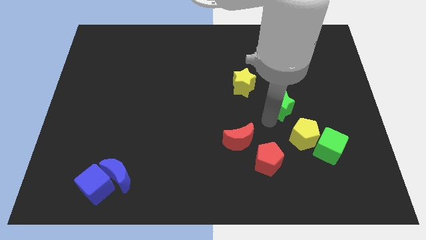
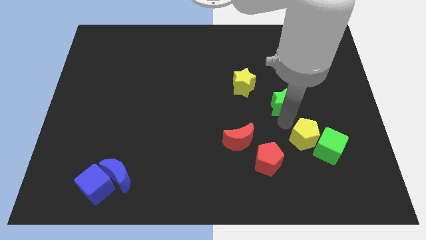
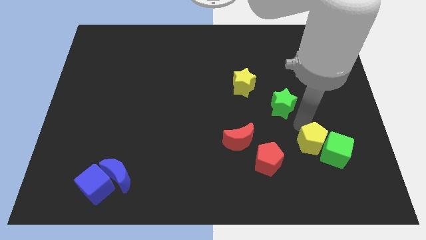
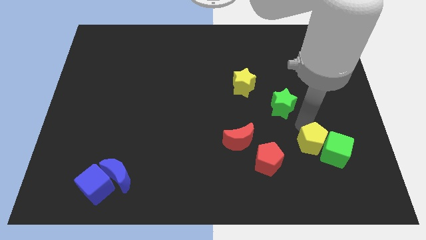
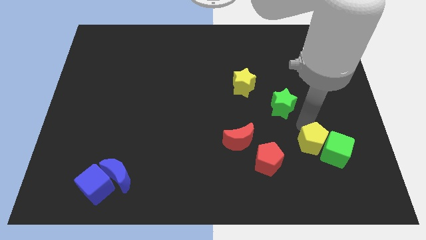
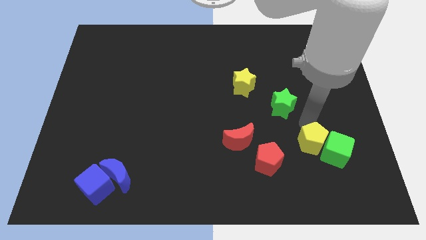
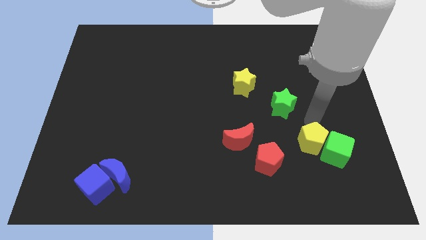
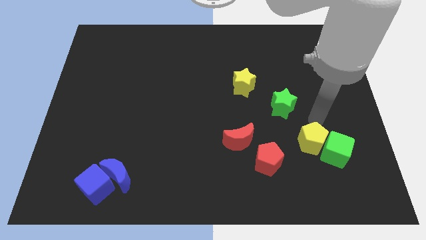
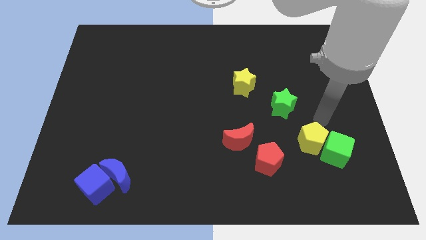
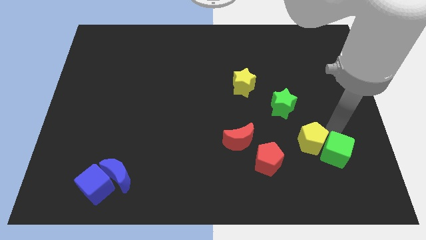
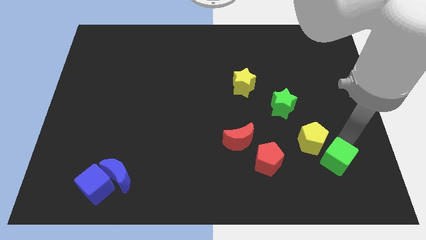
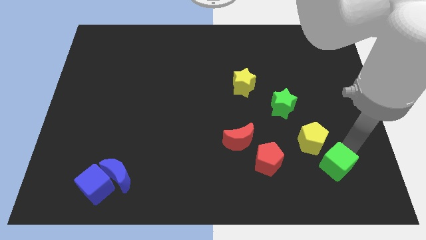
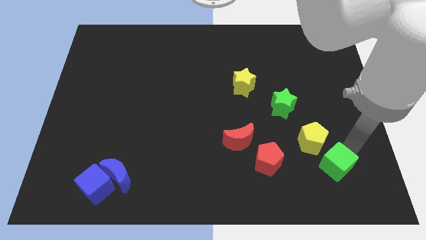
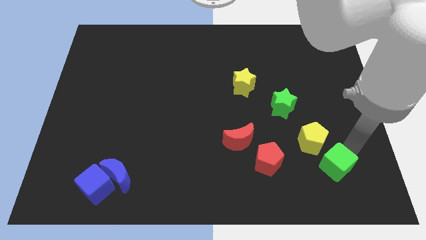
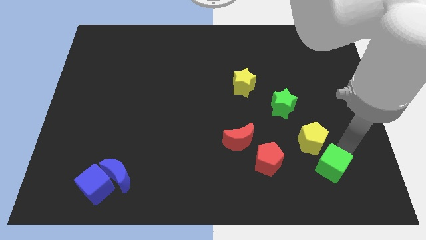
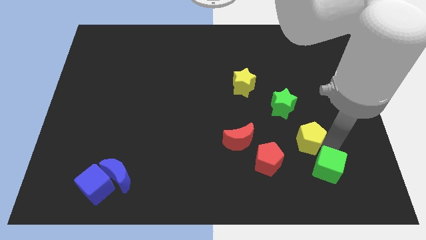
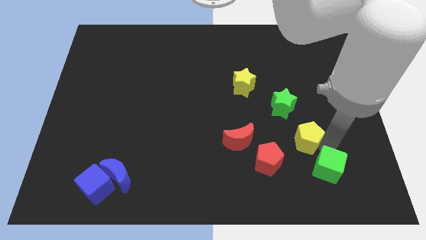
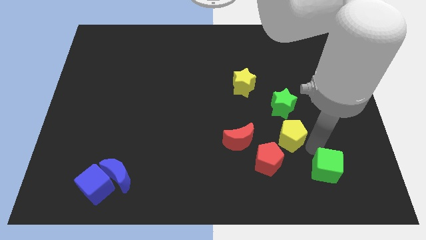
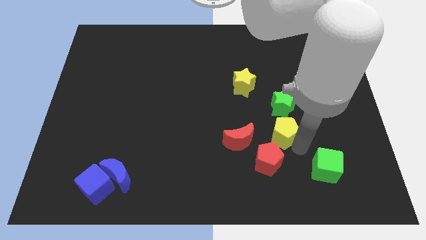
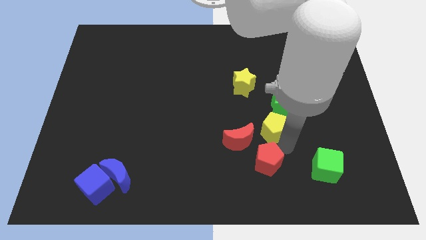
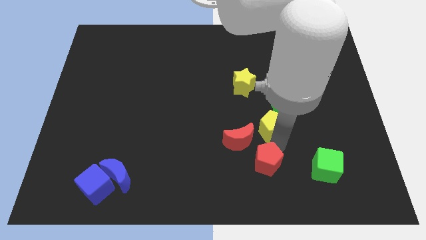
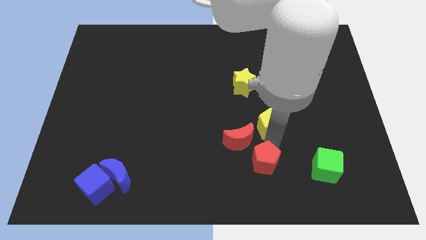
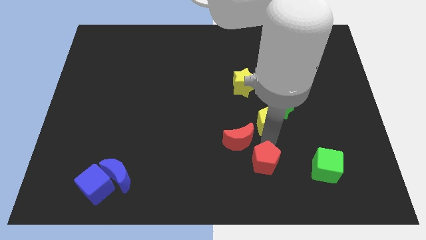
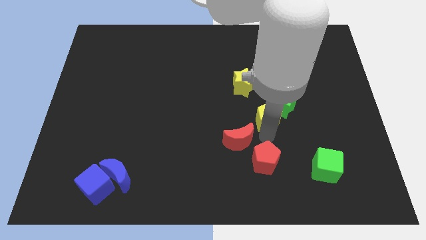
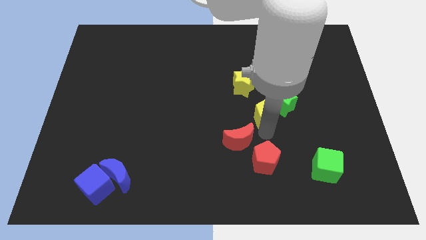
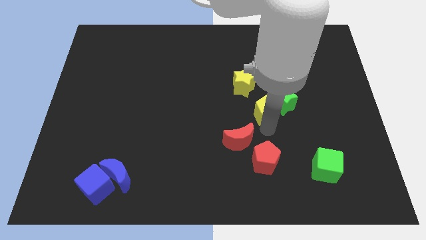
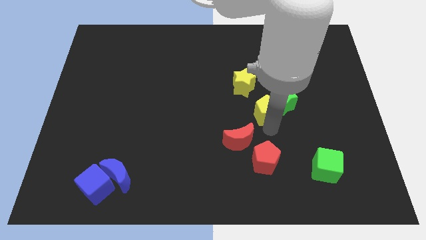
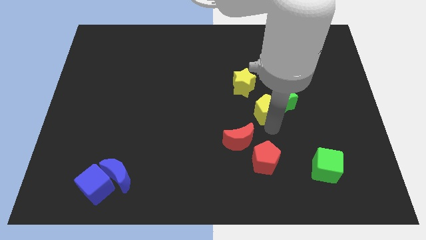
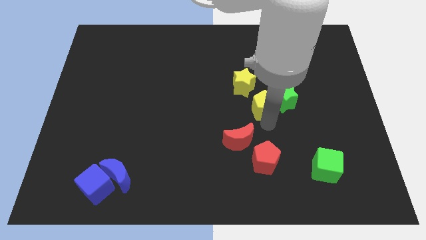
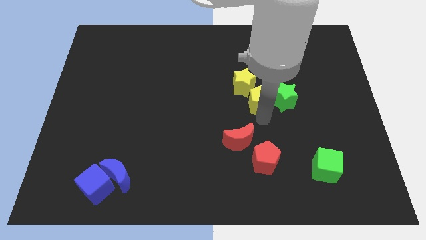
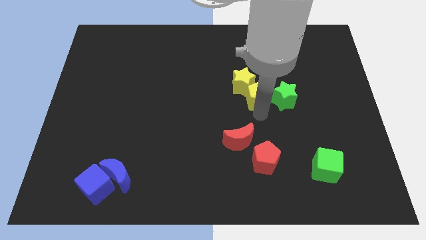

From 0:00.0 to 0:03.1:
move the yellow pentagon into the bottom right side of the yellow star

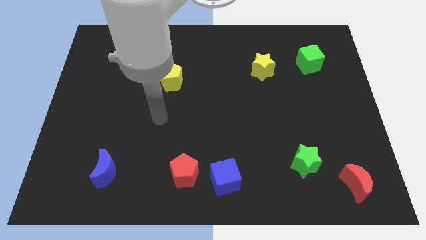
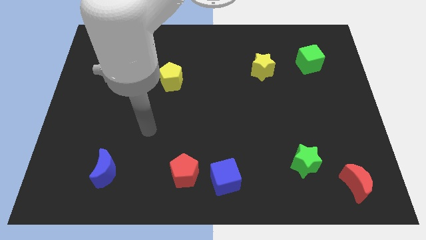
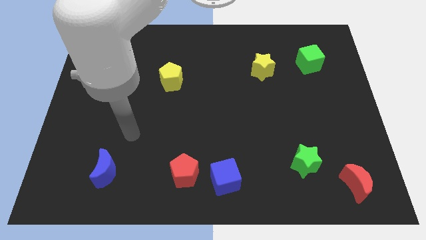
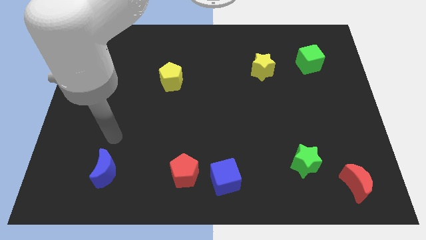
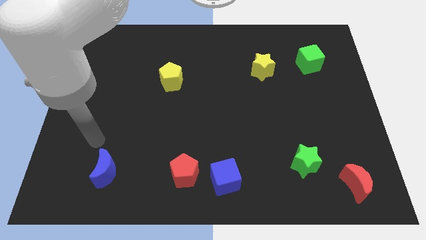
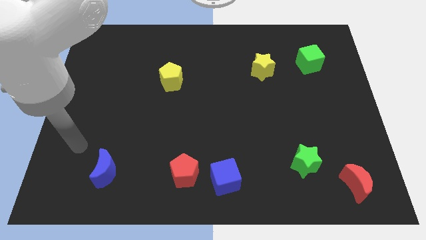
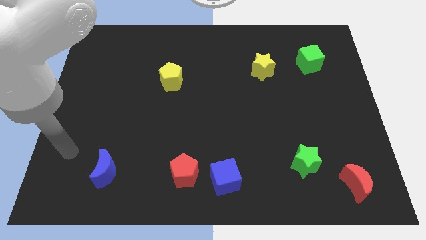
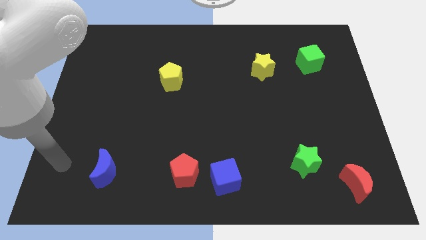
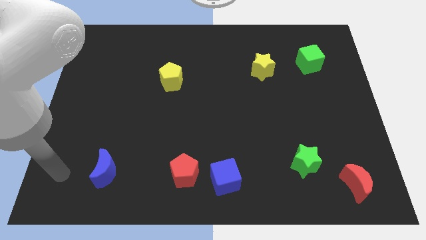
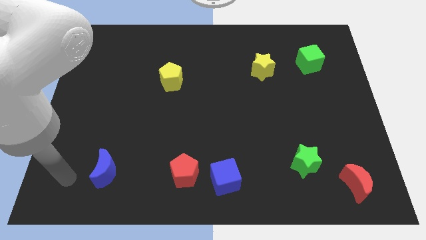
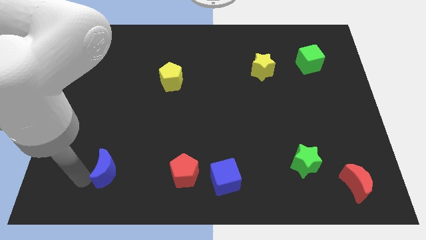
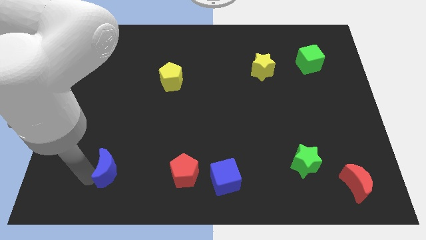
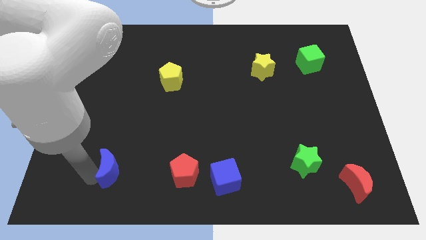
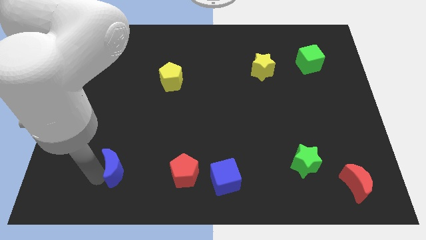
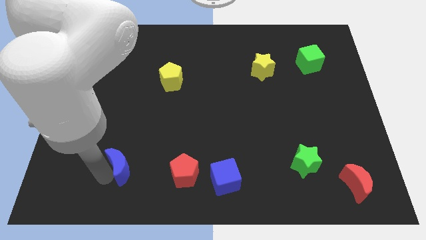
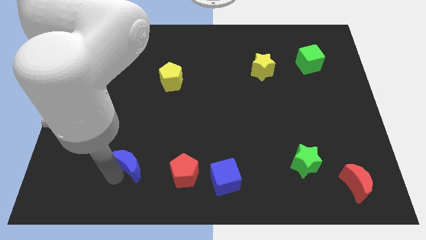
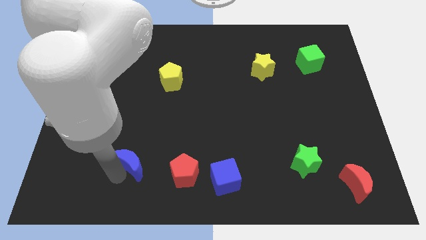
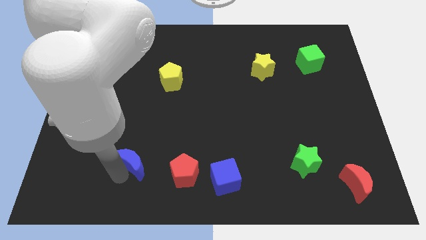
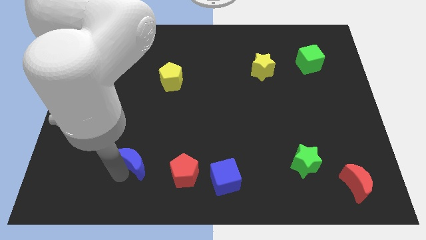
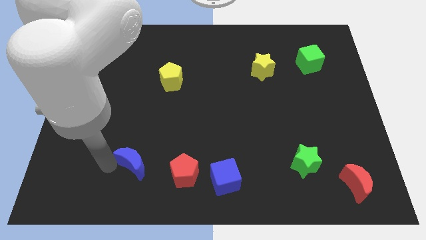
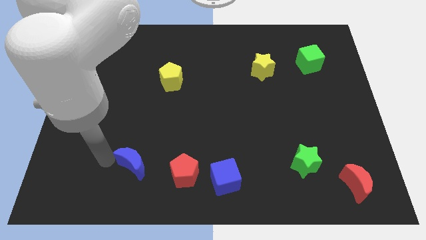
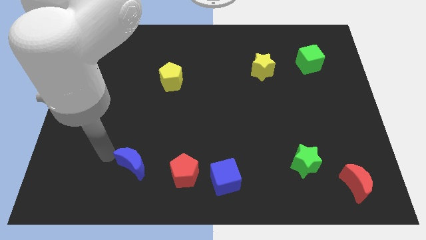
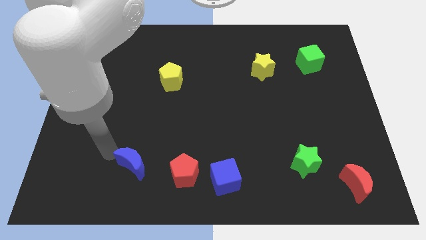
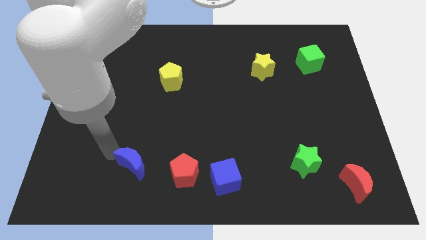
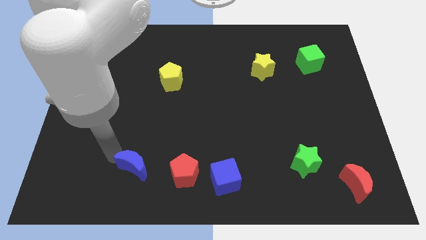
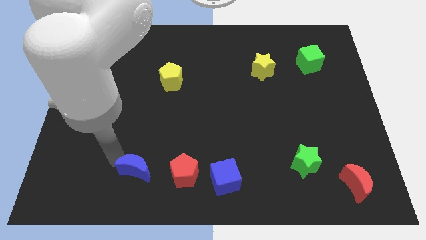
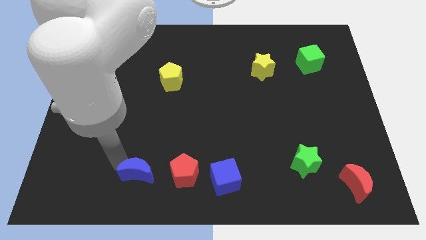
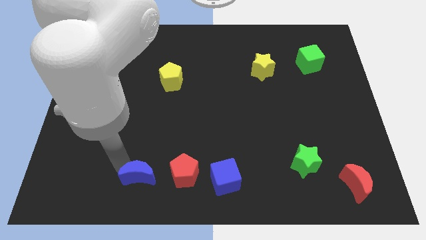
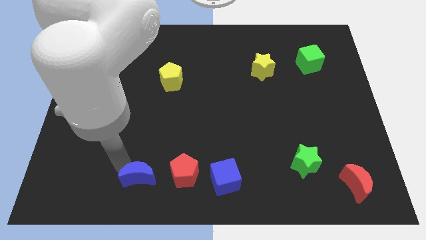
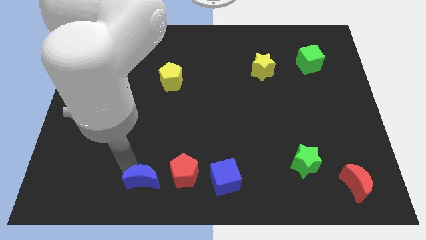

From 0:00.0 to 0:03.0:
move the blue crescent to the left of the red pentagon

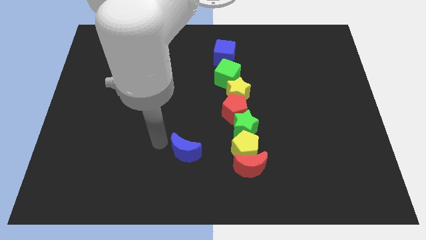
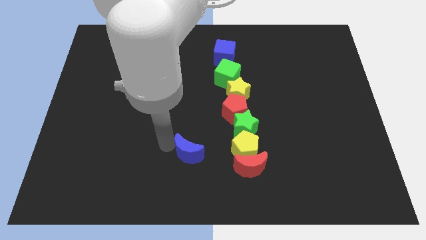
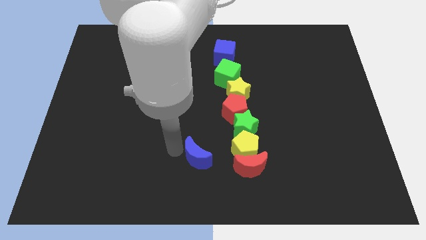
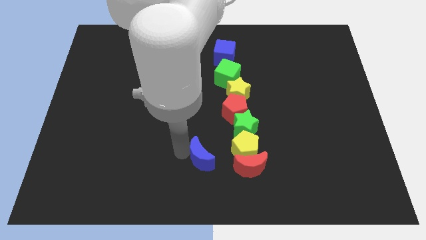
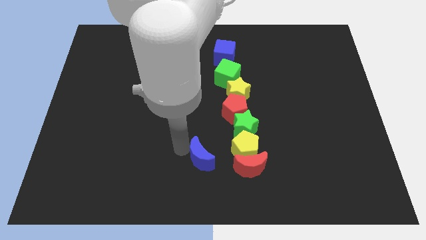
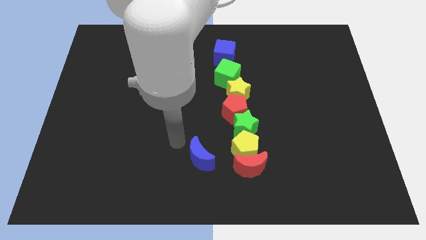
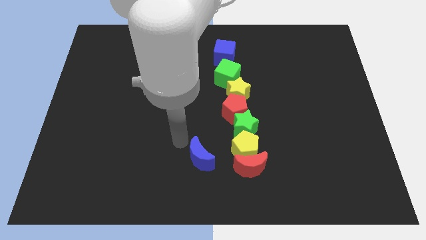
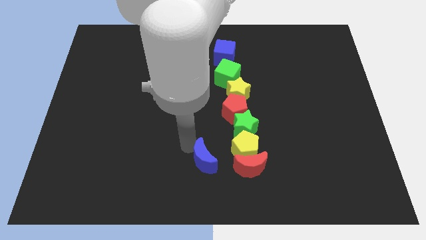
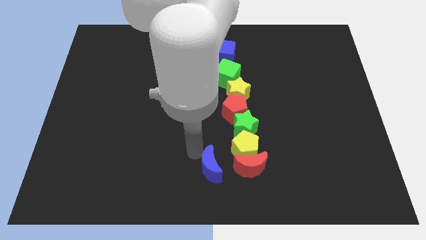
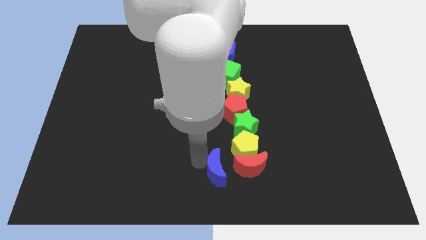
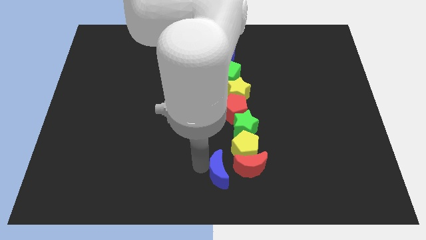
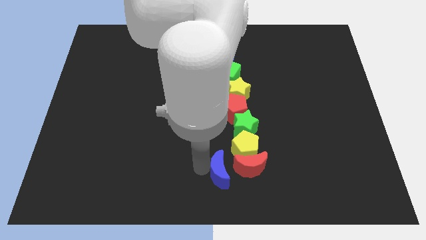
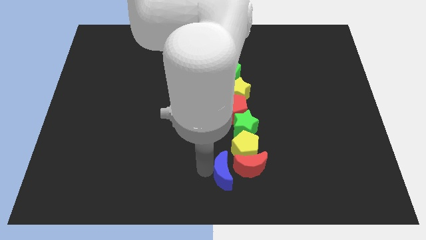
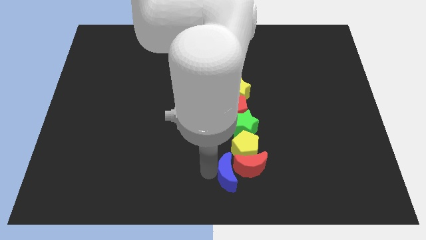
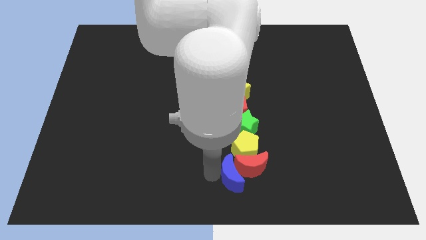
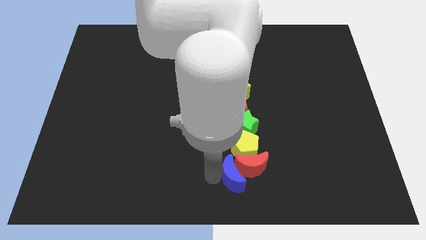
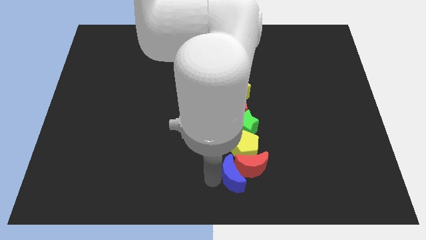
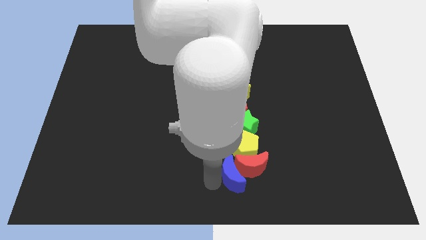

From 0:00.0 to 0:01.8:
slide the blue moon to the left side of the red moon

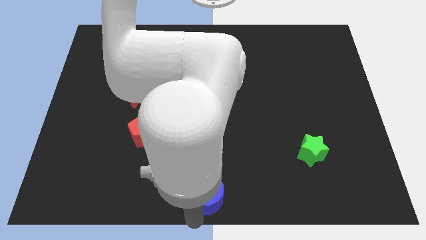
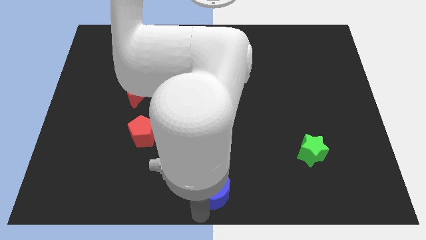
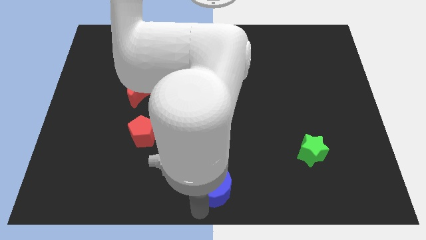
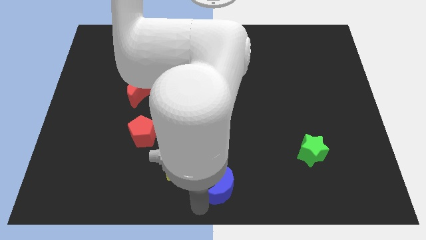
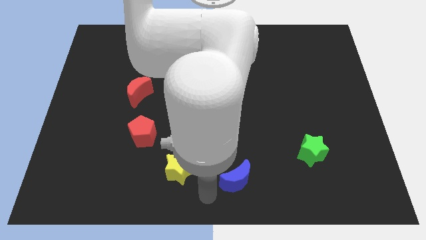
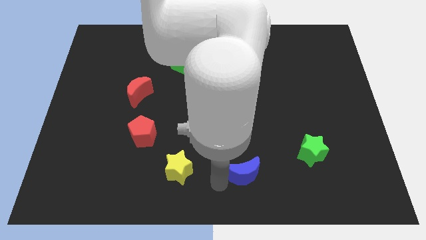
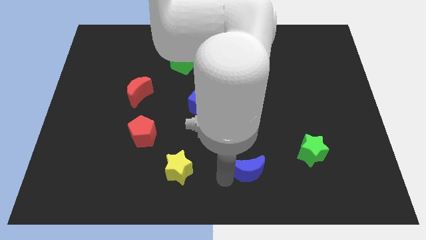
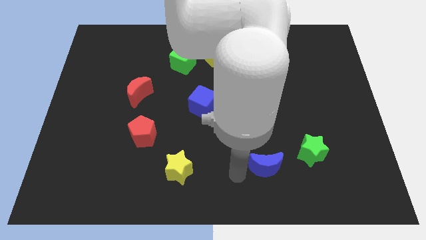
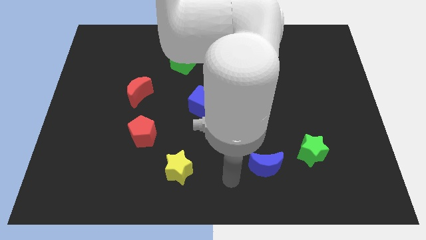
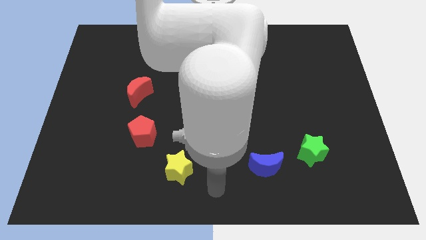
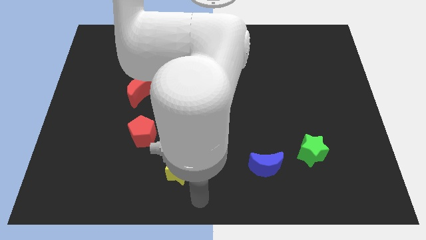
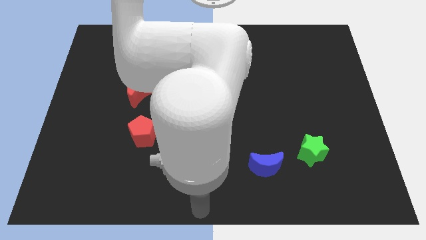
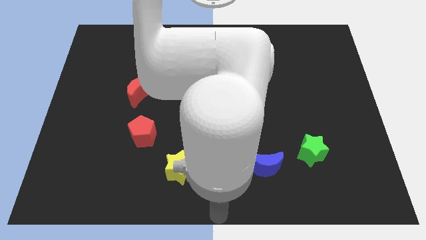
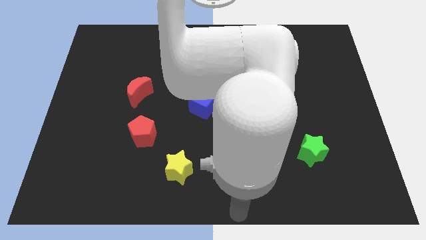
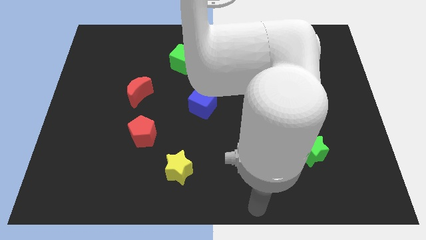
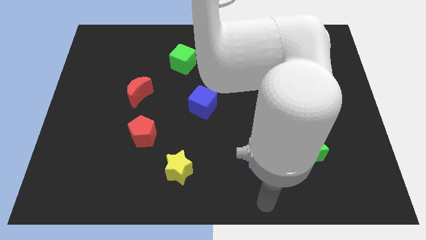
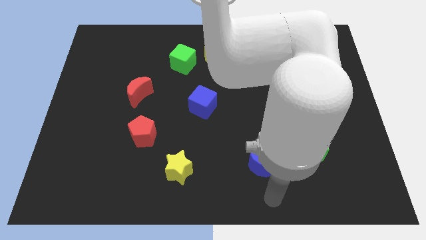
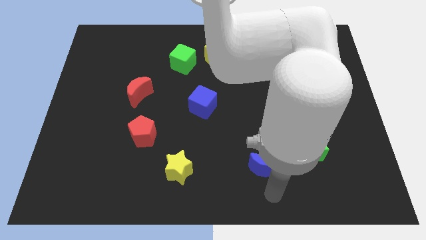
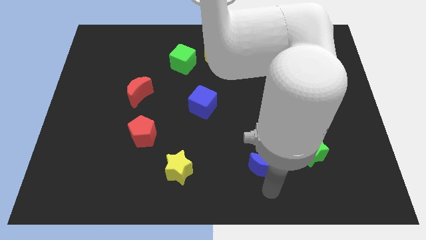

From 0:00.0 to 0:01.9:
push the blue crescent towards the green star
